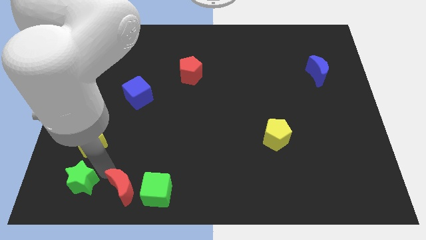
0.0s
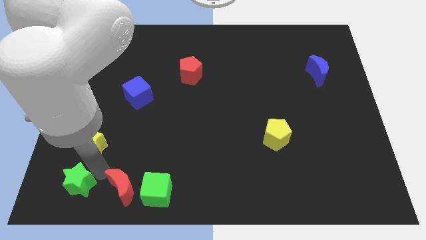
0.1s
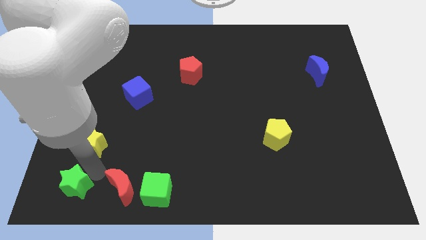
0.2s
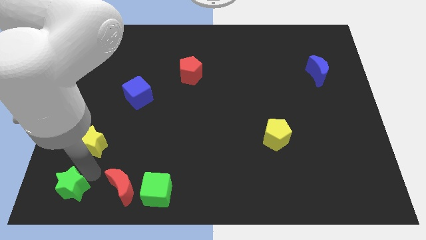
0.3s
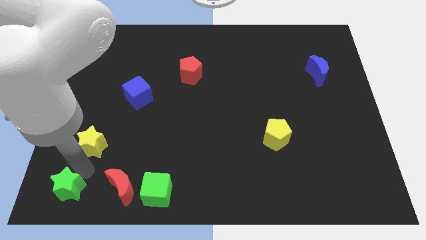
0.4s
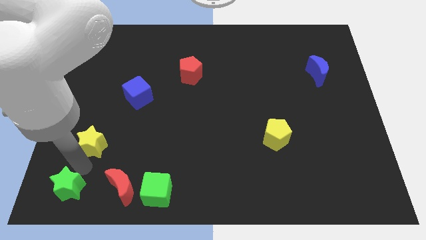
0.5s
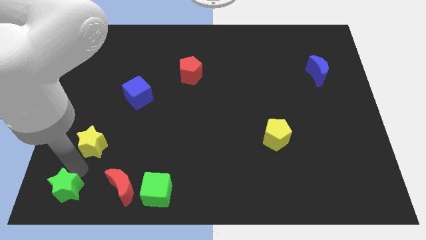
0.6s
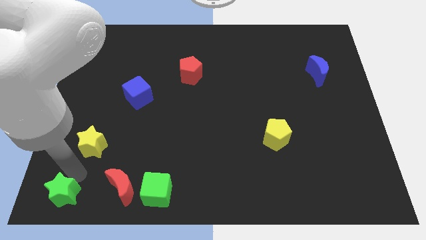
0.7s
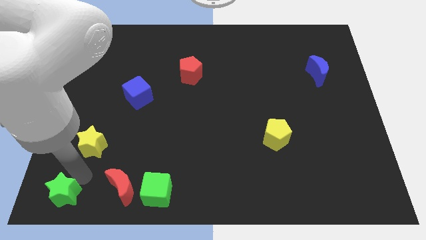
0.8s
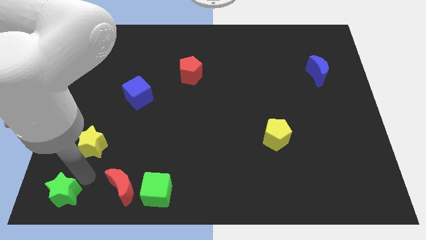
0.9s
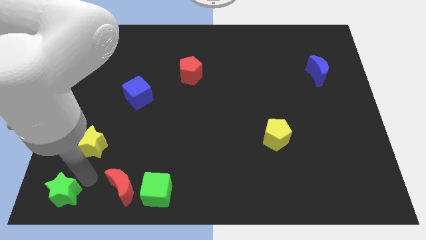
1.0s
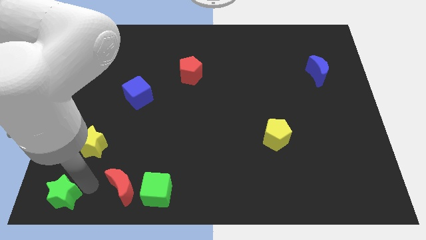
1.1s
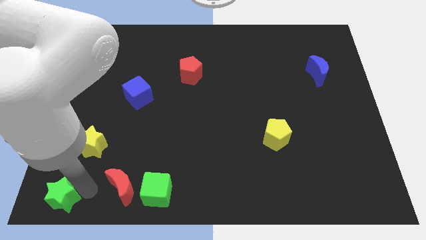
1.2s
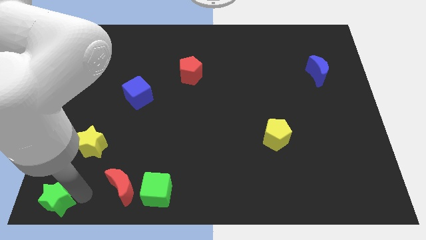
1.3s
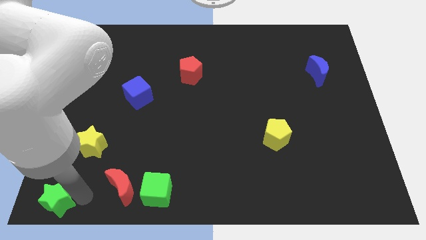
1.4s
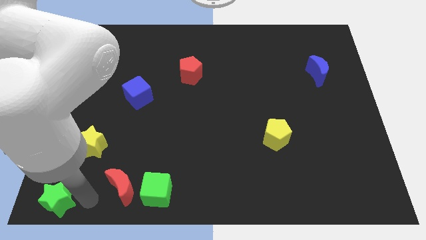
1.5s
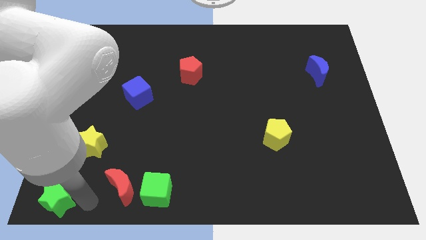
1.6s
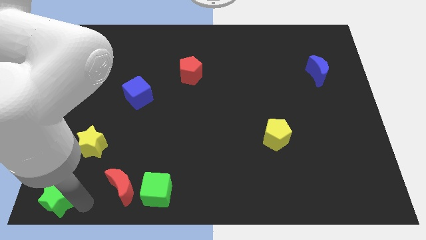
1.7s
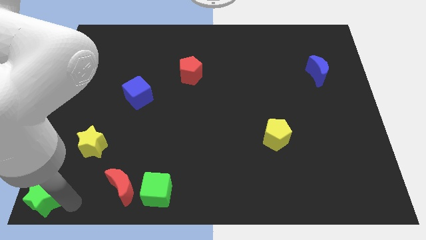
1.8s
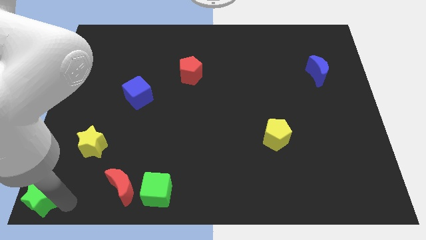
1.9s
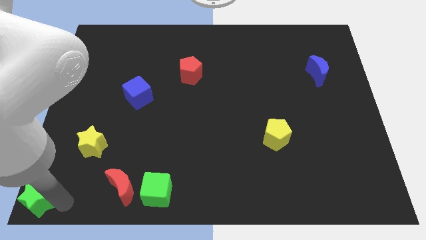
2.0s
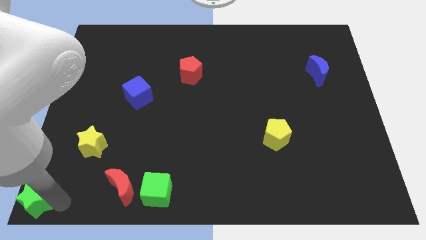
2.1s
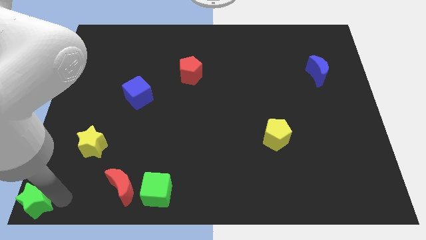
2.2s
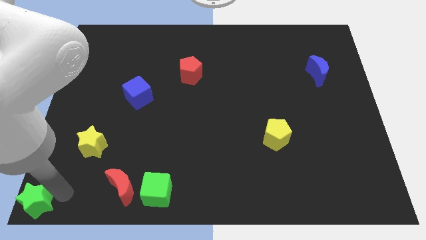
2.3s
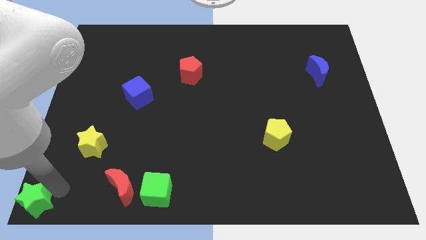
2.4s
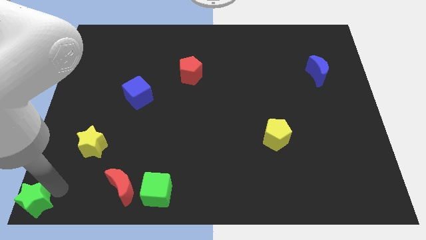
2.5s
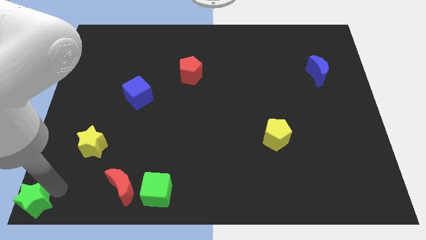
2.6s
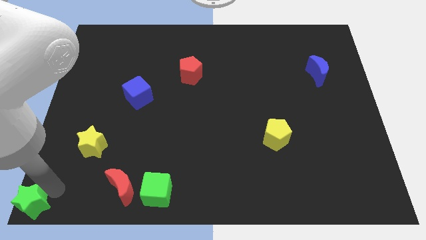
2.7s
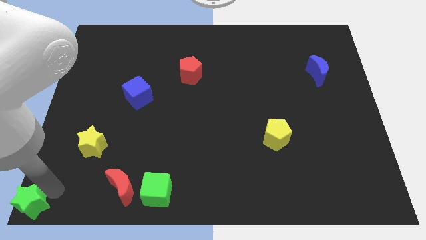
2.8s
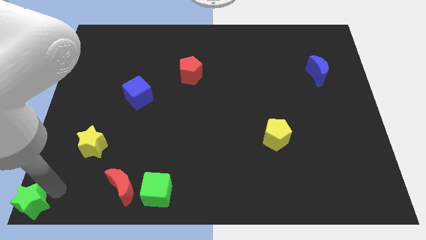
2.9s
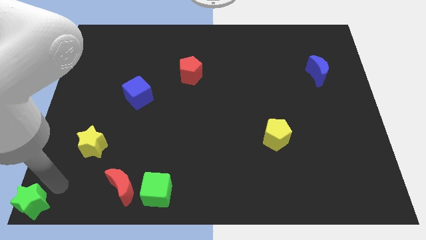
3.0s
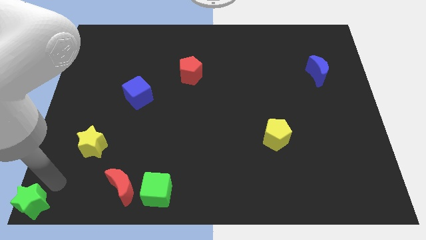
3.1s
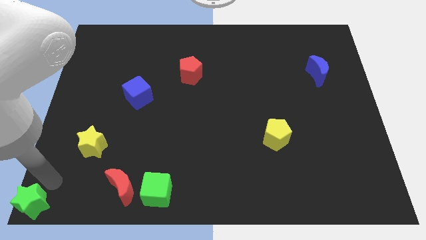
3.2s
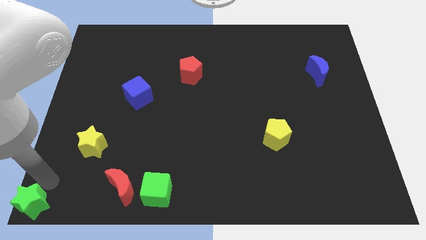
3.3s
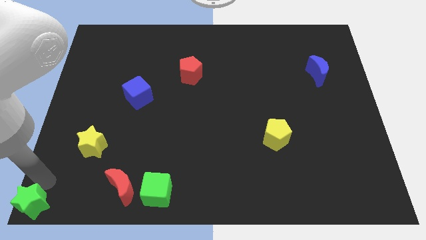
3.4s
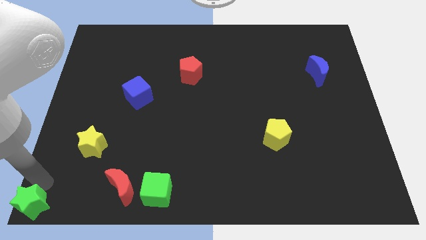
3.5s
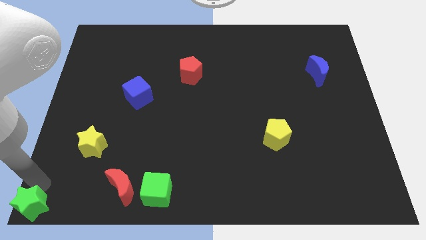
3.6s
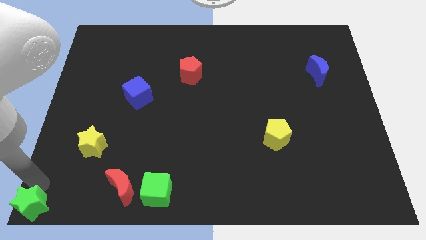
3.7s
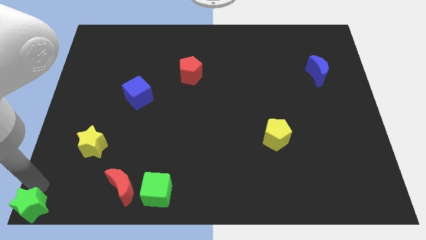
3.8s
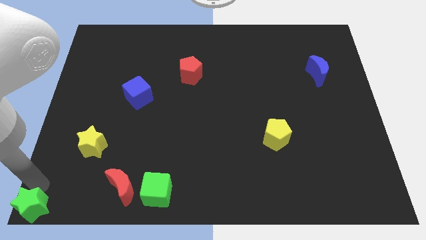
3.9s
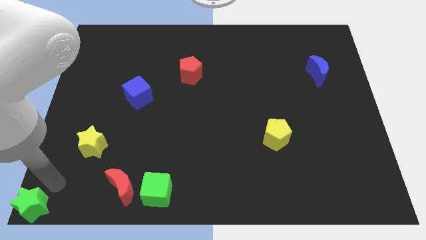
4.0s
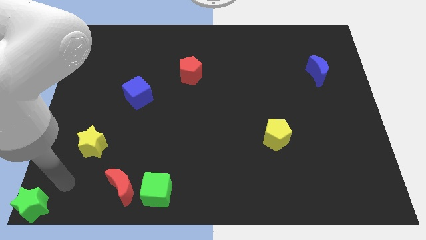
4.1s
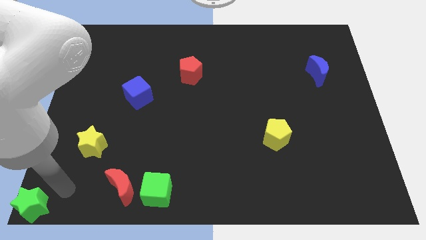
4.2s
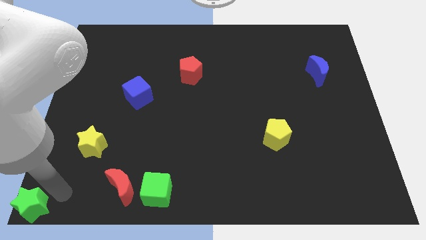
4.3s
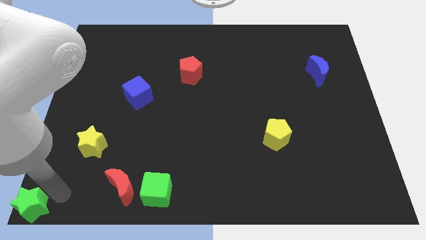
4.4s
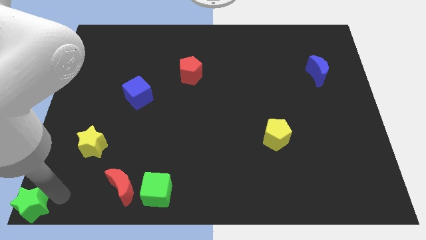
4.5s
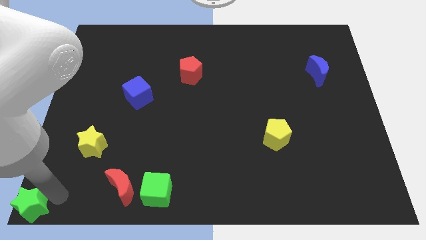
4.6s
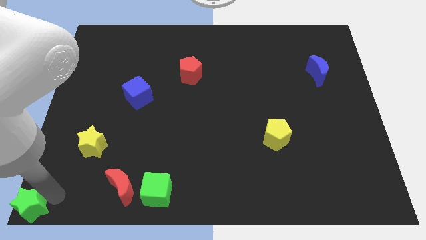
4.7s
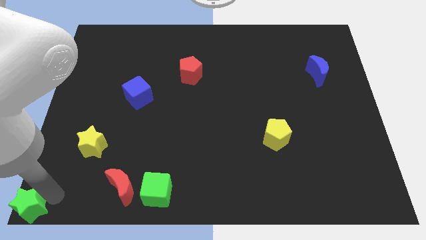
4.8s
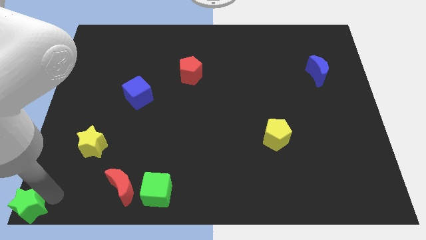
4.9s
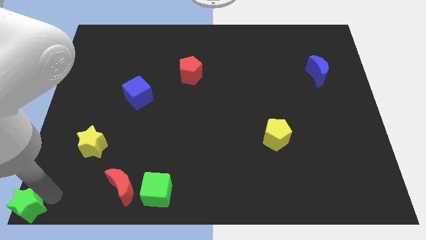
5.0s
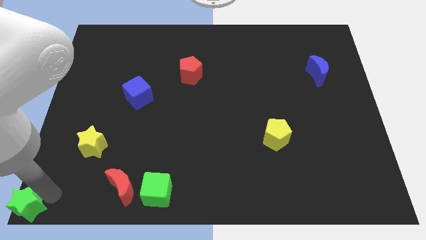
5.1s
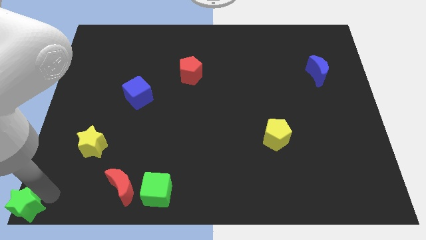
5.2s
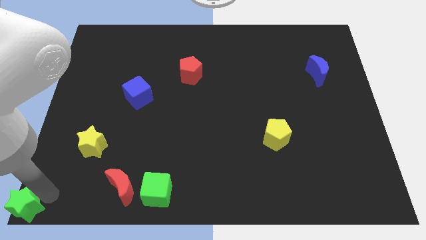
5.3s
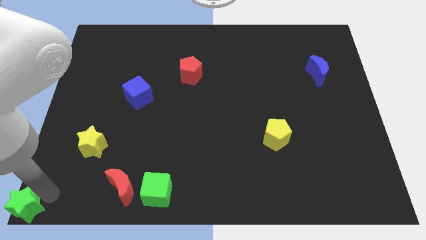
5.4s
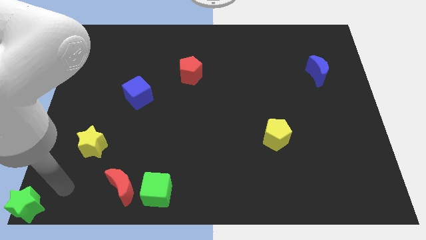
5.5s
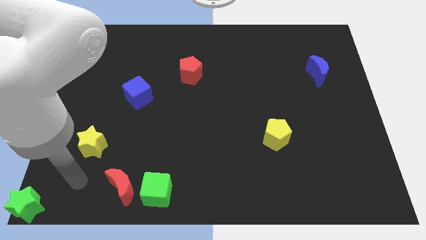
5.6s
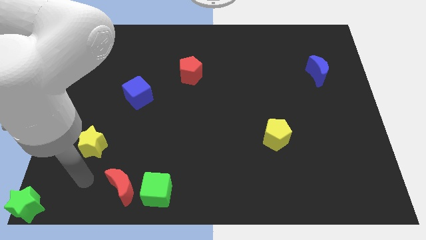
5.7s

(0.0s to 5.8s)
move the green star to the bottom left corner of the board

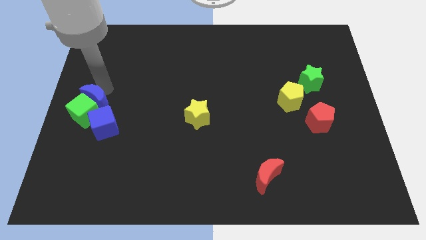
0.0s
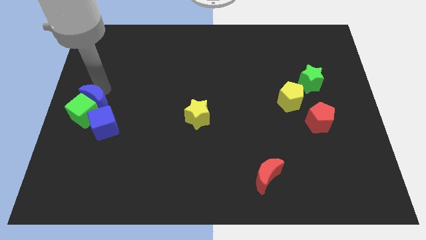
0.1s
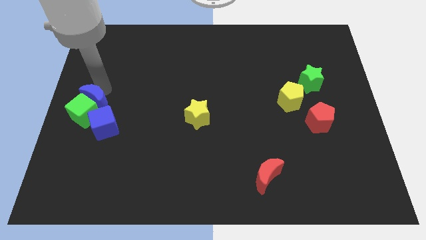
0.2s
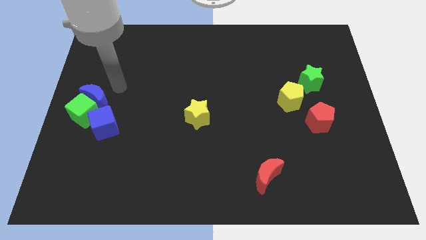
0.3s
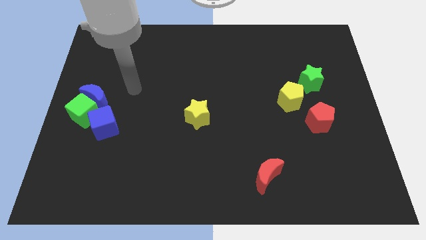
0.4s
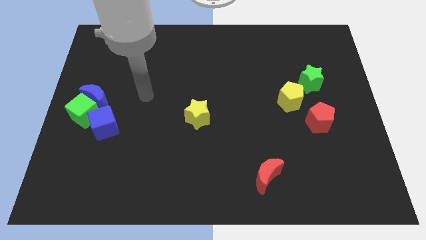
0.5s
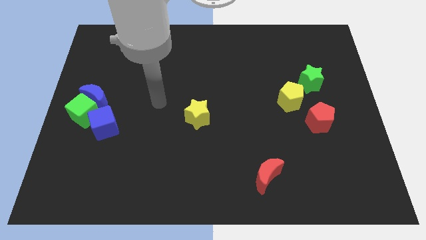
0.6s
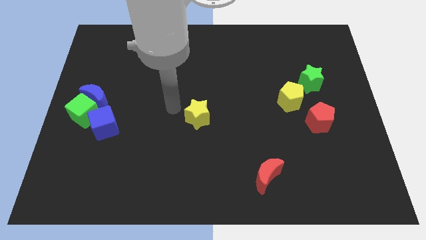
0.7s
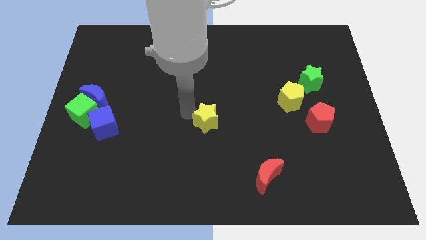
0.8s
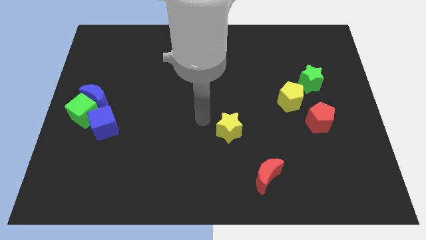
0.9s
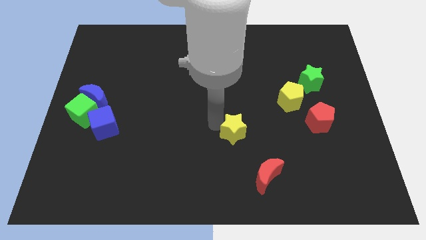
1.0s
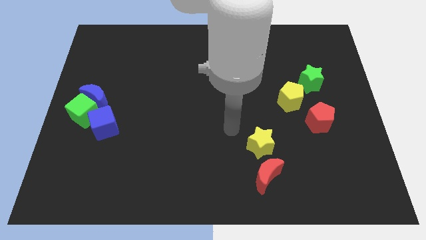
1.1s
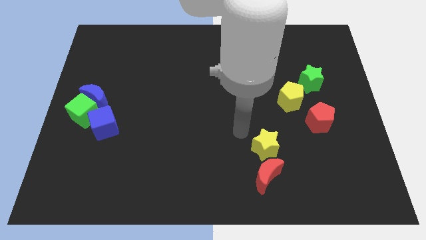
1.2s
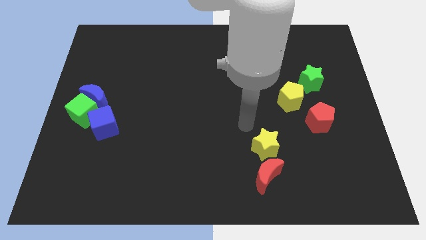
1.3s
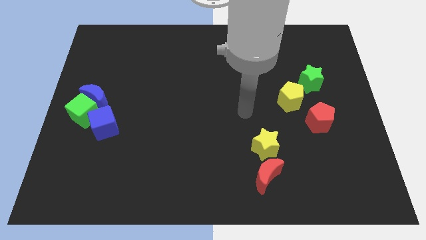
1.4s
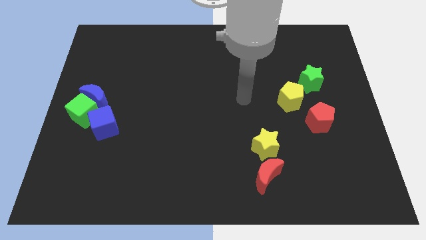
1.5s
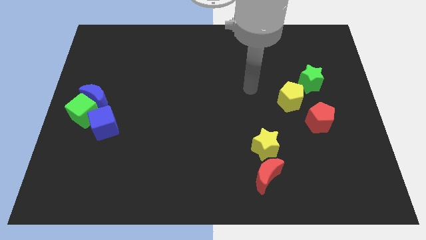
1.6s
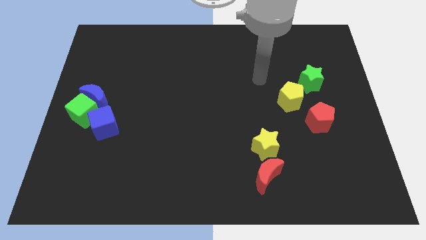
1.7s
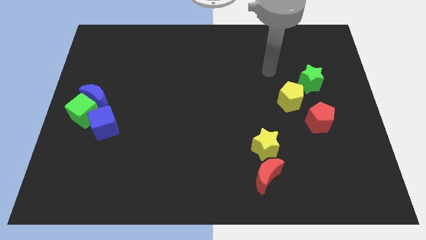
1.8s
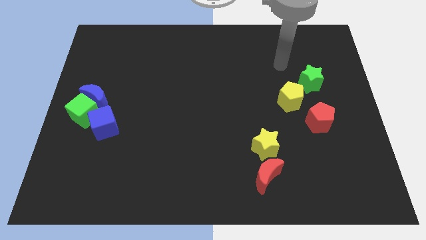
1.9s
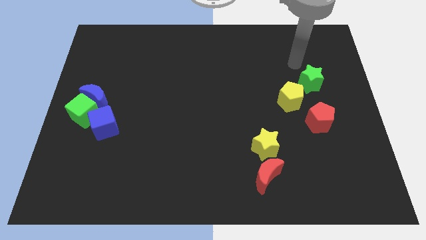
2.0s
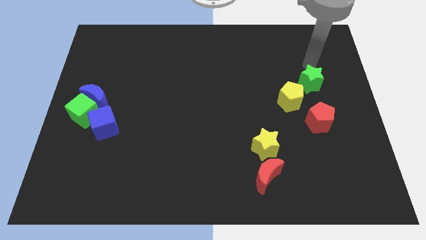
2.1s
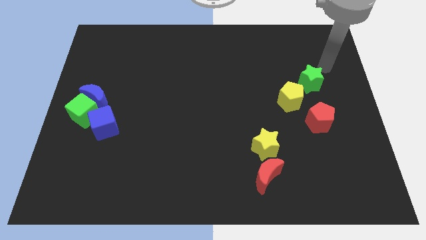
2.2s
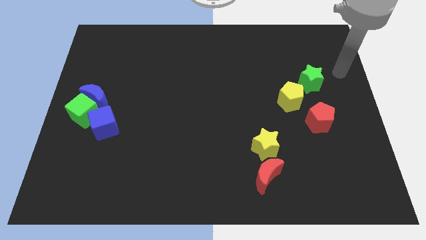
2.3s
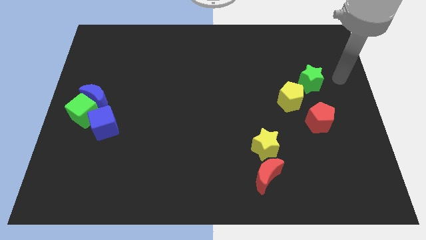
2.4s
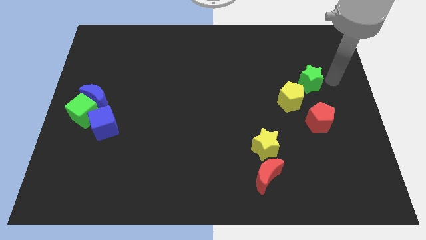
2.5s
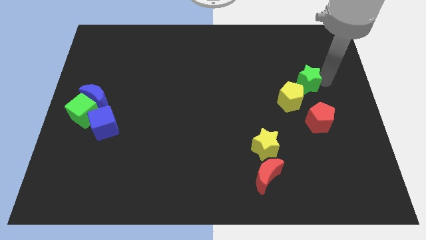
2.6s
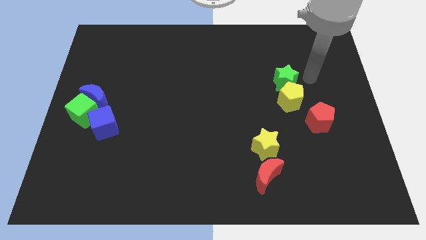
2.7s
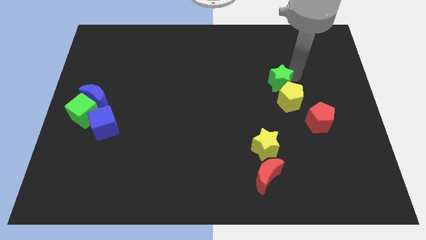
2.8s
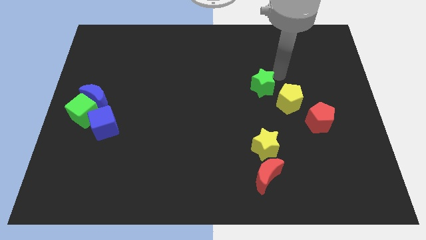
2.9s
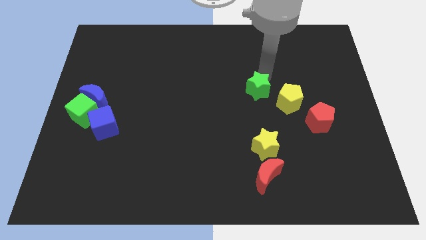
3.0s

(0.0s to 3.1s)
push the yellow star above the red moon

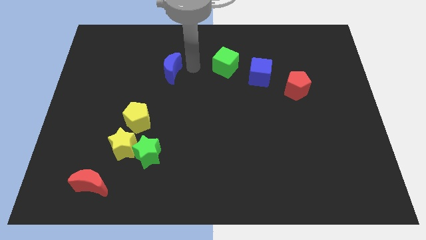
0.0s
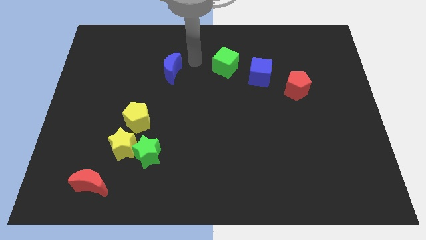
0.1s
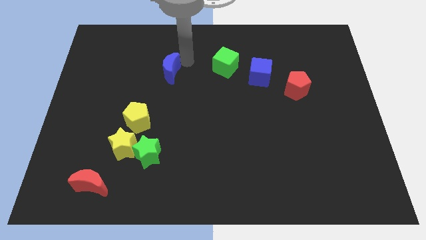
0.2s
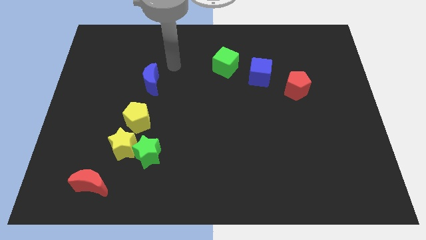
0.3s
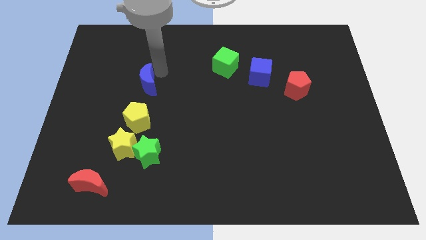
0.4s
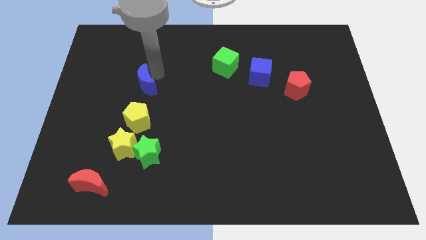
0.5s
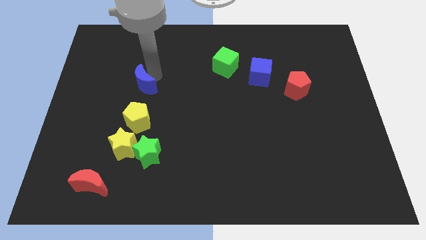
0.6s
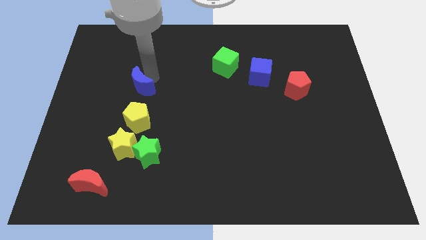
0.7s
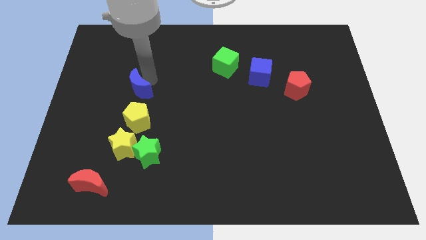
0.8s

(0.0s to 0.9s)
push the blue crescent above the yellow pentagon
